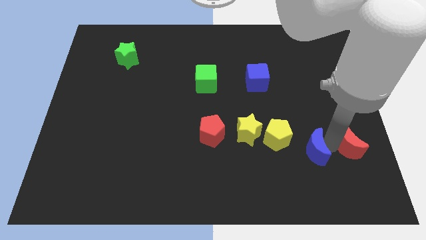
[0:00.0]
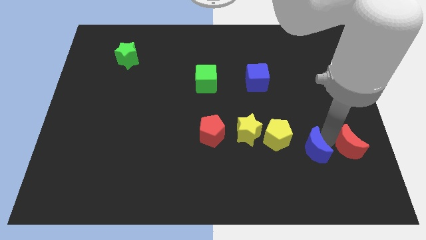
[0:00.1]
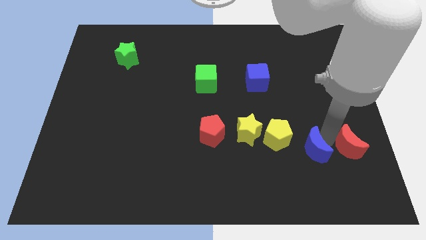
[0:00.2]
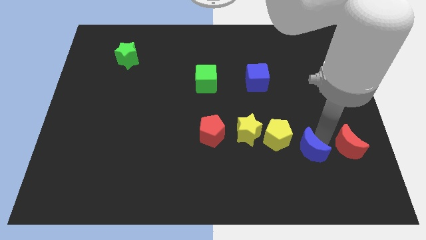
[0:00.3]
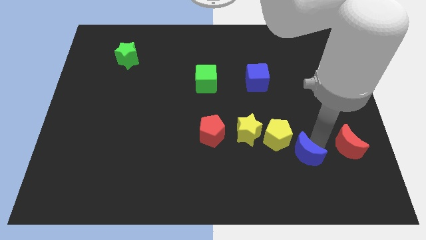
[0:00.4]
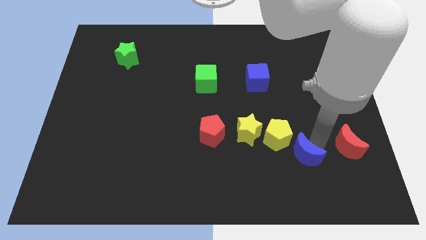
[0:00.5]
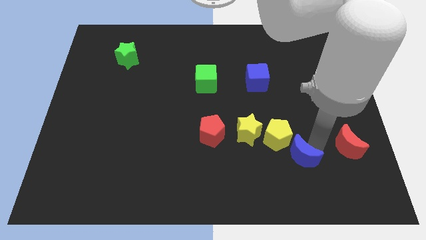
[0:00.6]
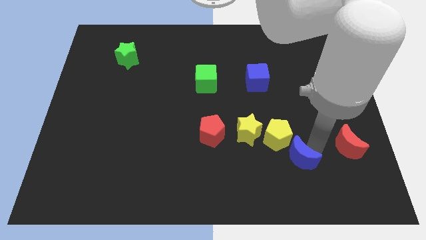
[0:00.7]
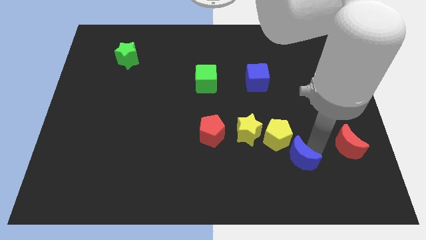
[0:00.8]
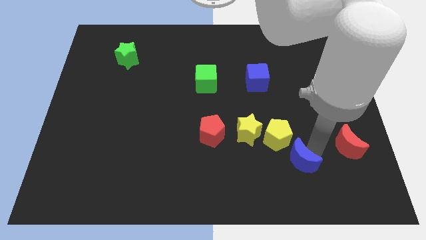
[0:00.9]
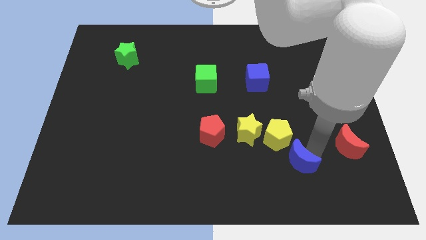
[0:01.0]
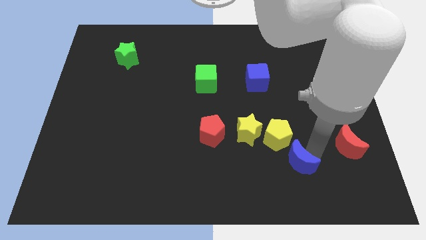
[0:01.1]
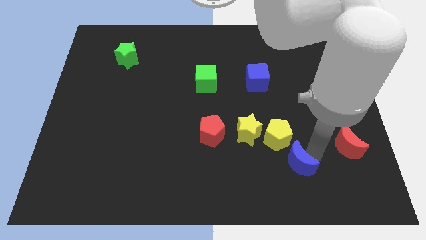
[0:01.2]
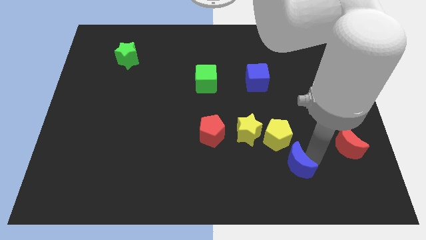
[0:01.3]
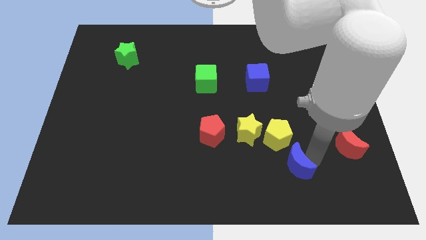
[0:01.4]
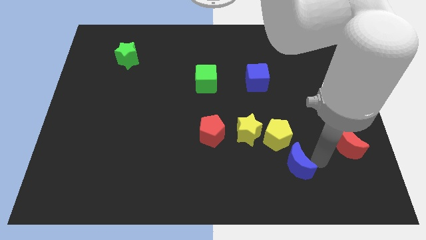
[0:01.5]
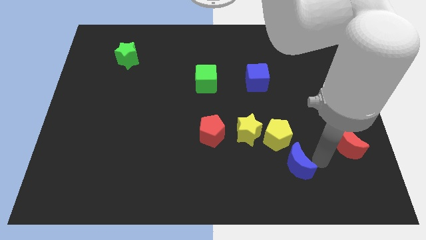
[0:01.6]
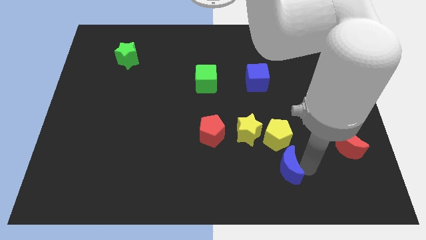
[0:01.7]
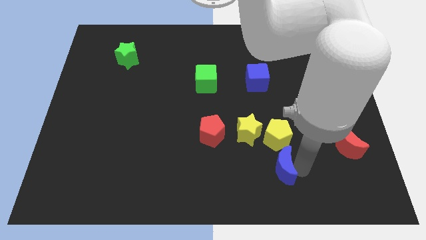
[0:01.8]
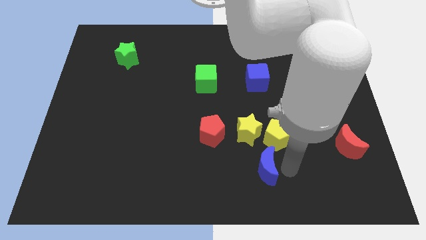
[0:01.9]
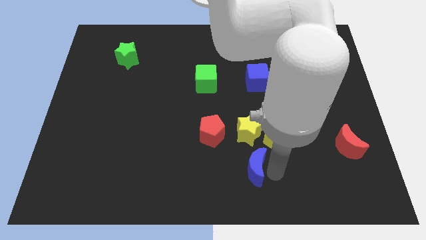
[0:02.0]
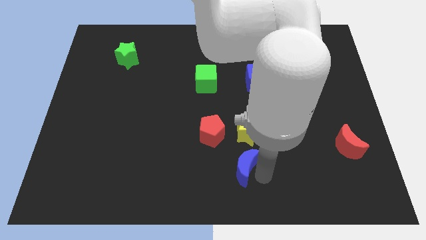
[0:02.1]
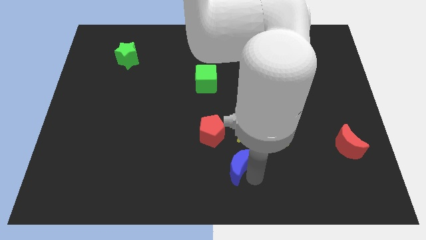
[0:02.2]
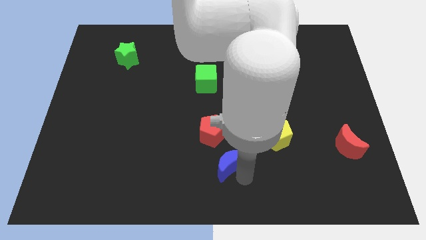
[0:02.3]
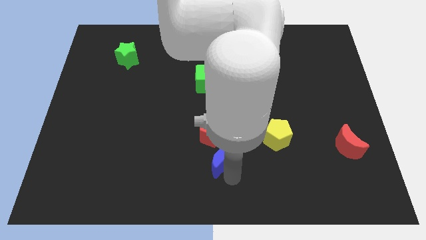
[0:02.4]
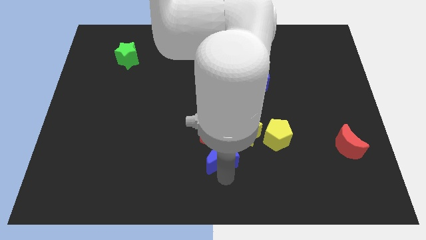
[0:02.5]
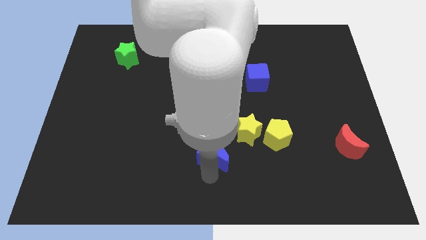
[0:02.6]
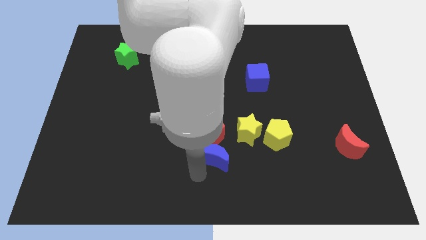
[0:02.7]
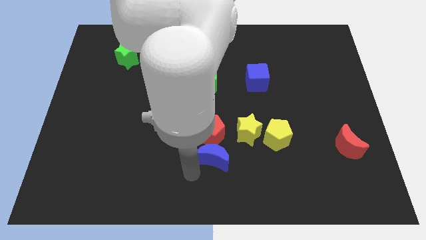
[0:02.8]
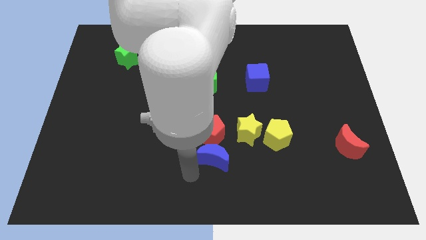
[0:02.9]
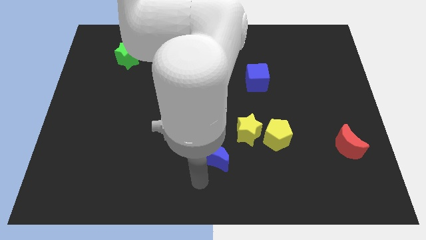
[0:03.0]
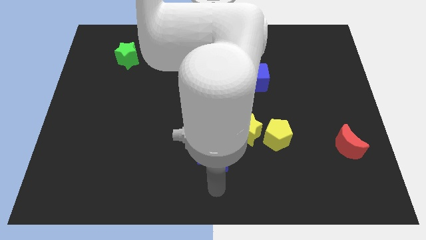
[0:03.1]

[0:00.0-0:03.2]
put the blue moon to the bottom side of the red pentagon

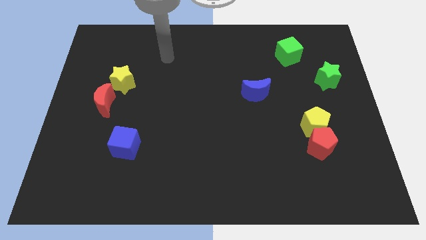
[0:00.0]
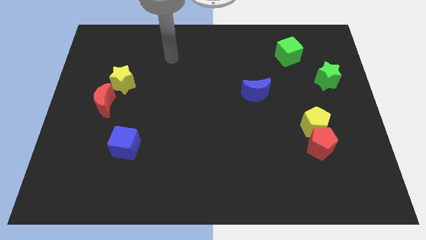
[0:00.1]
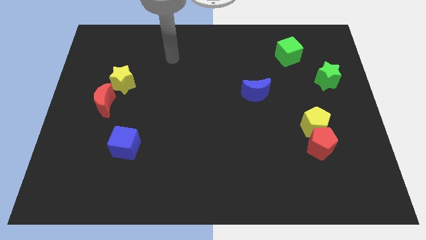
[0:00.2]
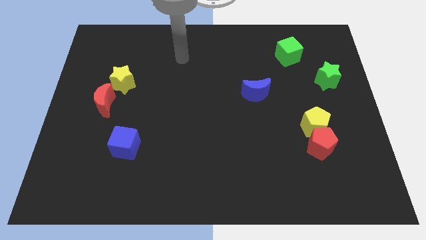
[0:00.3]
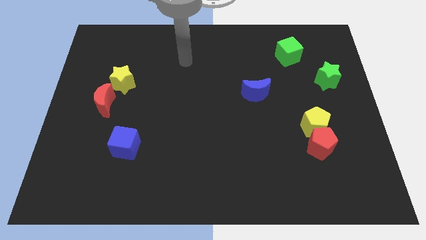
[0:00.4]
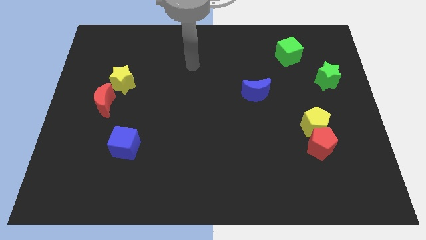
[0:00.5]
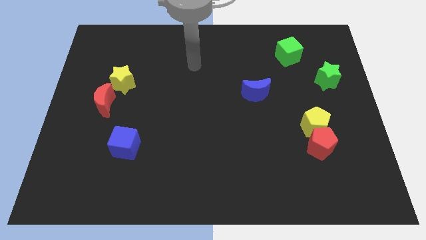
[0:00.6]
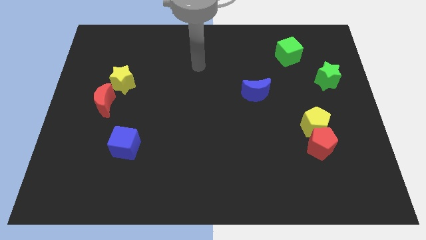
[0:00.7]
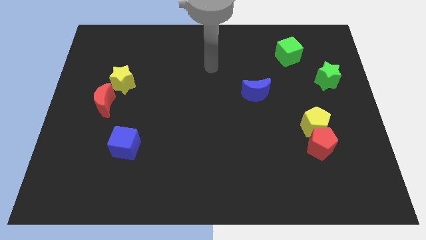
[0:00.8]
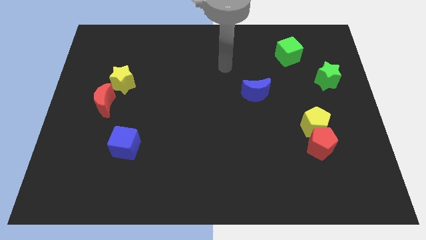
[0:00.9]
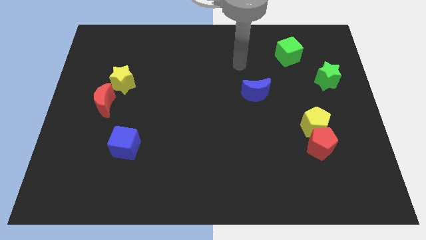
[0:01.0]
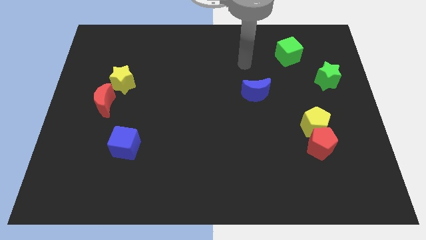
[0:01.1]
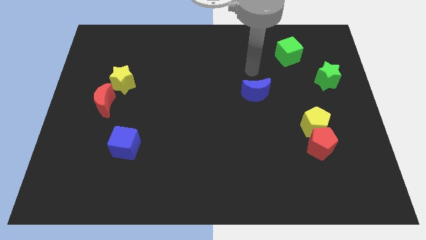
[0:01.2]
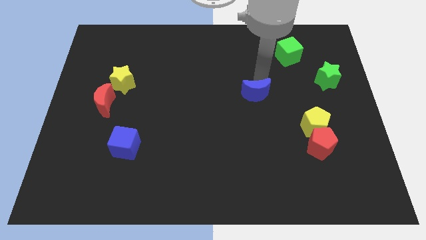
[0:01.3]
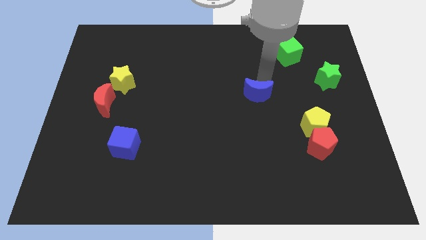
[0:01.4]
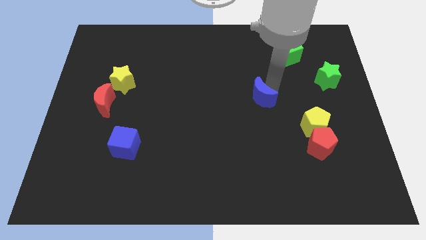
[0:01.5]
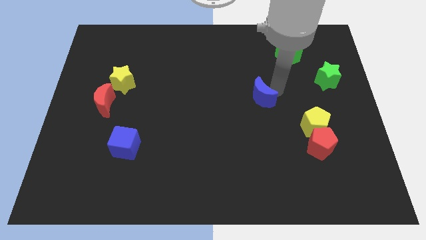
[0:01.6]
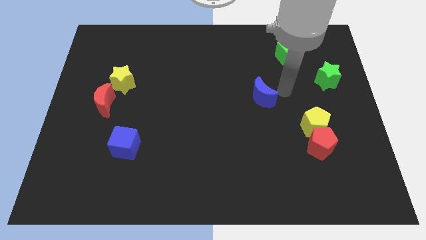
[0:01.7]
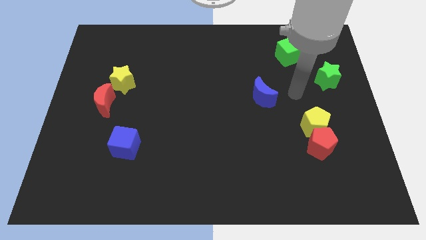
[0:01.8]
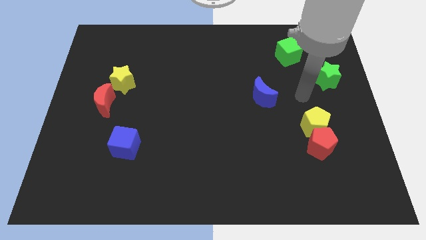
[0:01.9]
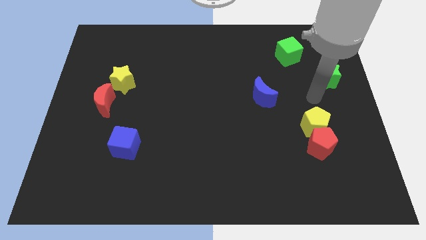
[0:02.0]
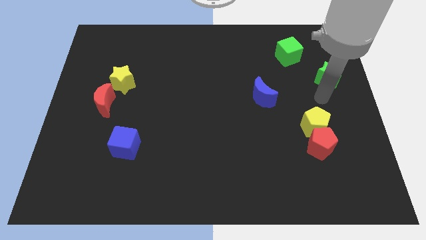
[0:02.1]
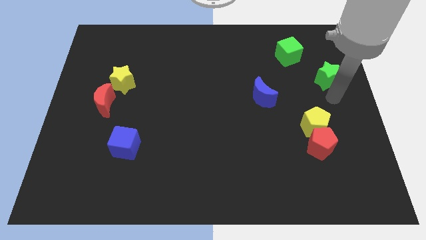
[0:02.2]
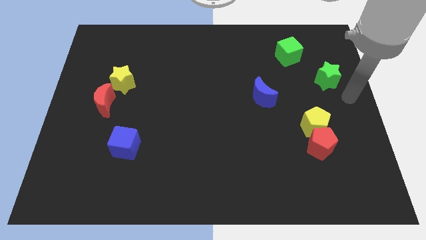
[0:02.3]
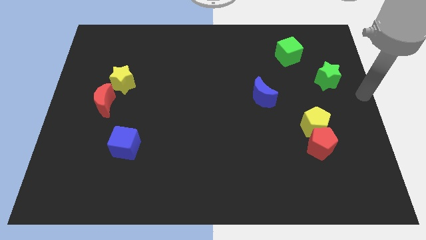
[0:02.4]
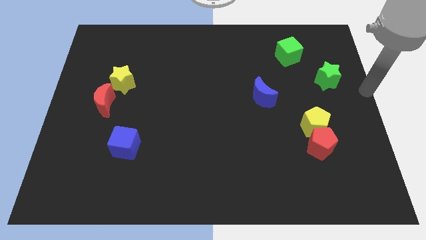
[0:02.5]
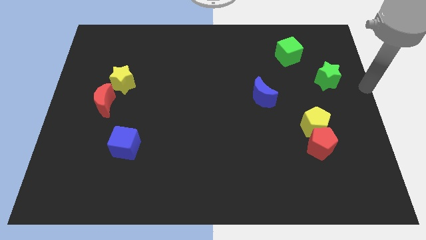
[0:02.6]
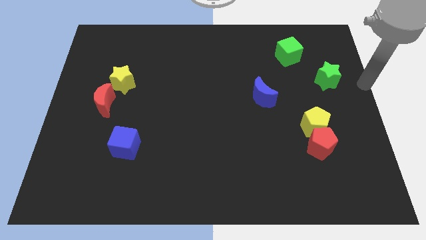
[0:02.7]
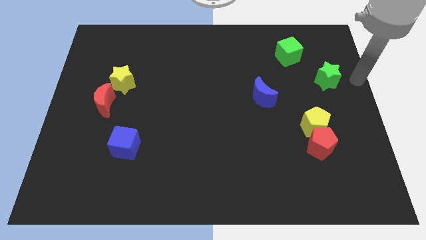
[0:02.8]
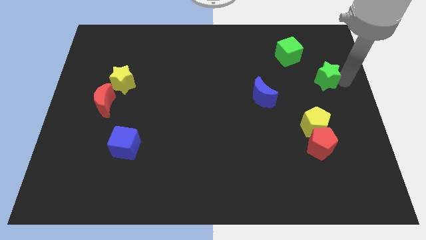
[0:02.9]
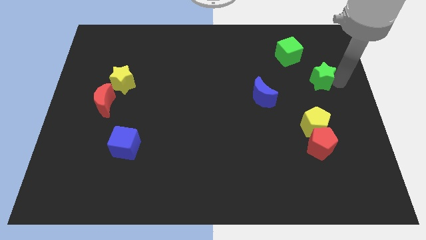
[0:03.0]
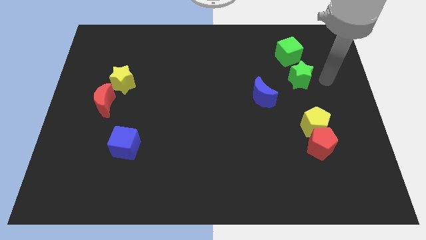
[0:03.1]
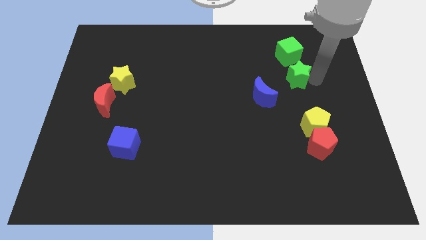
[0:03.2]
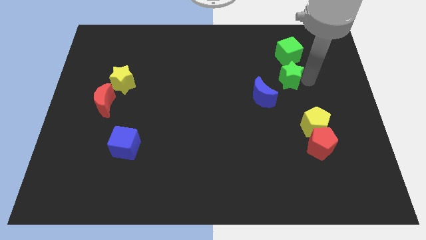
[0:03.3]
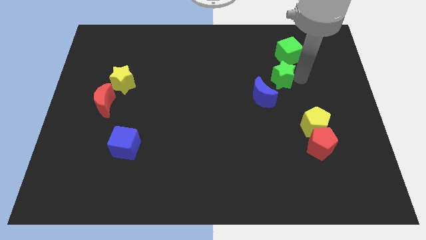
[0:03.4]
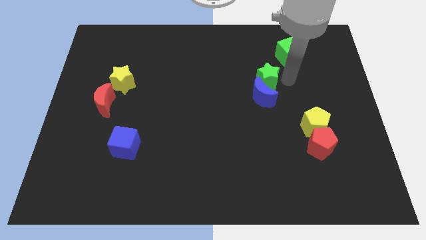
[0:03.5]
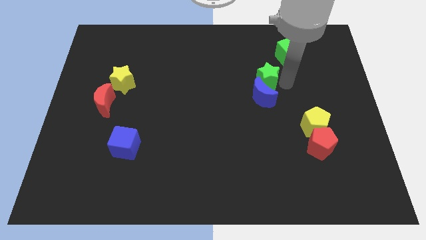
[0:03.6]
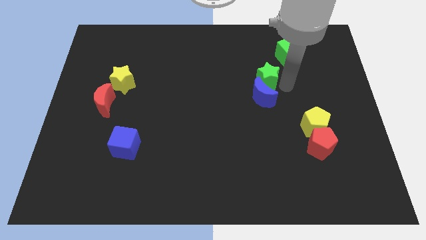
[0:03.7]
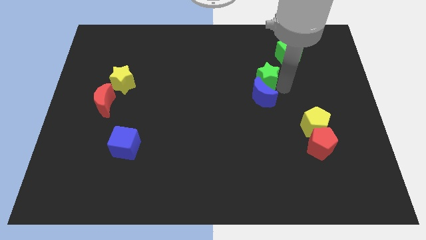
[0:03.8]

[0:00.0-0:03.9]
place the green star above the blue moon

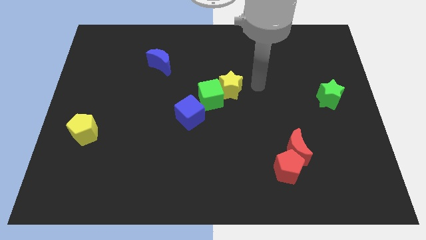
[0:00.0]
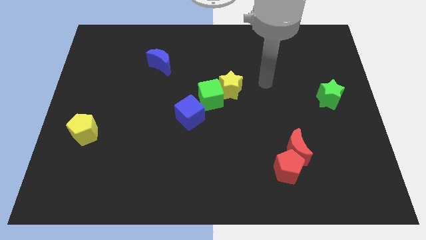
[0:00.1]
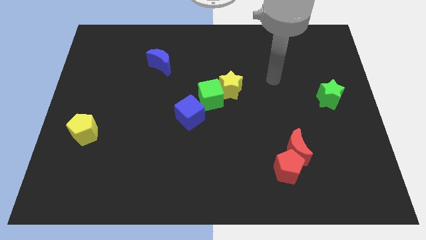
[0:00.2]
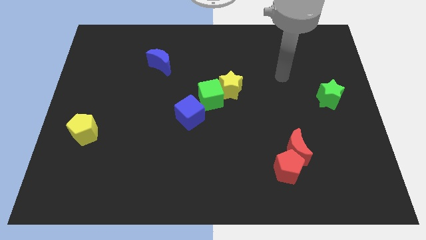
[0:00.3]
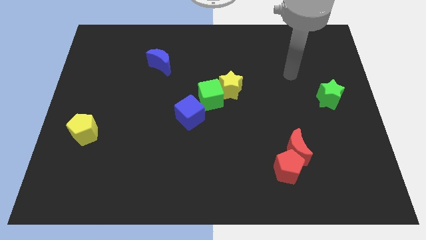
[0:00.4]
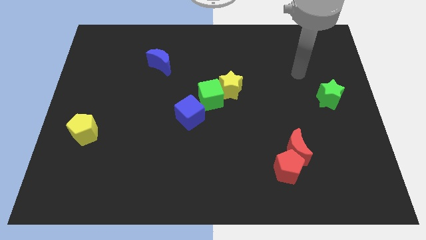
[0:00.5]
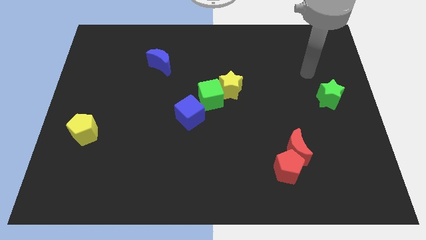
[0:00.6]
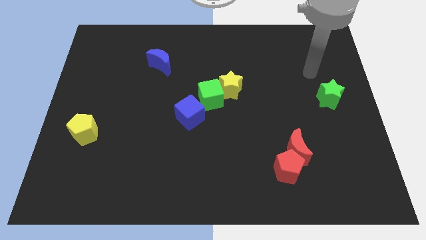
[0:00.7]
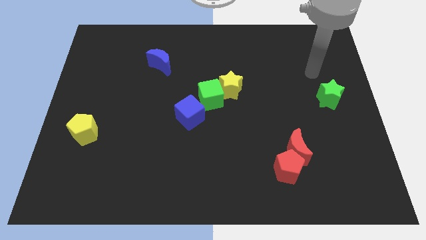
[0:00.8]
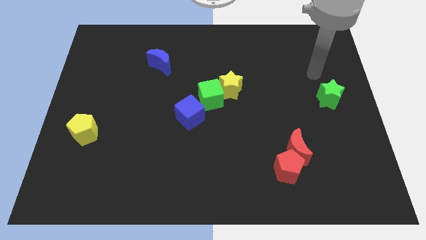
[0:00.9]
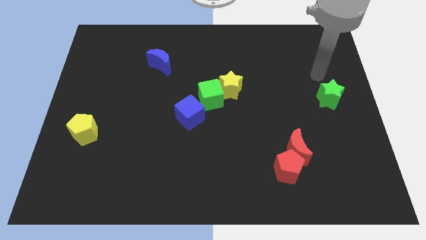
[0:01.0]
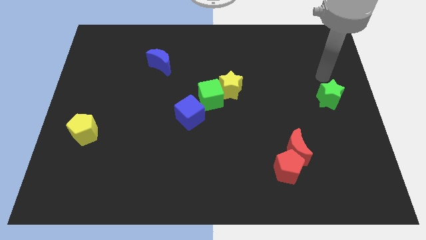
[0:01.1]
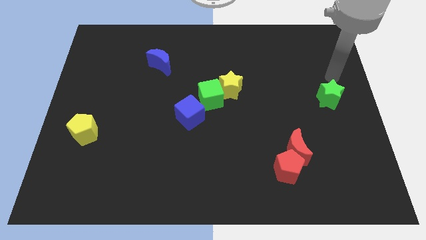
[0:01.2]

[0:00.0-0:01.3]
point your arm at the top of the green star

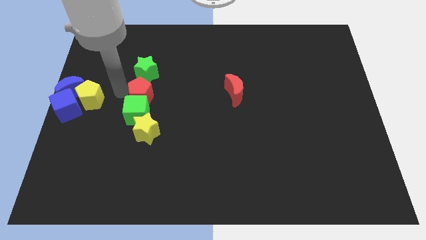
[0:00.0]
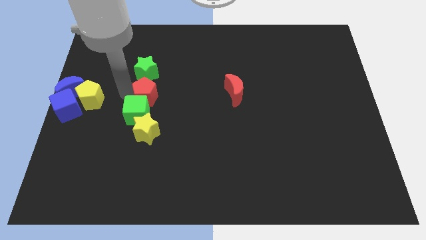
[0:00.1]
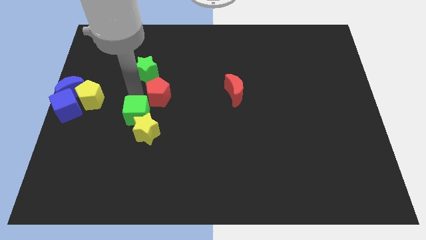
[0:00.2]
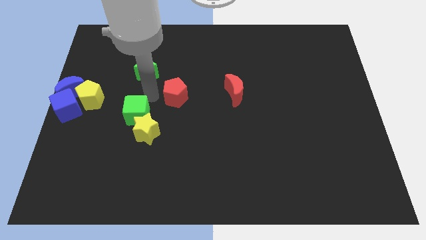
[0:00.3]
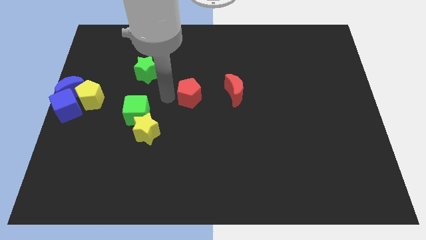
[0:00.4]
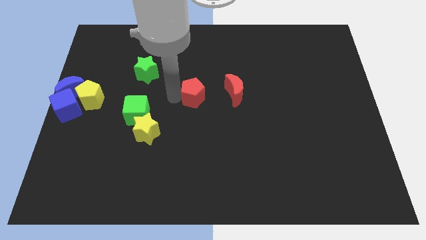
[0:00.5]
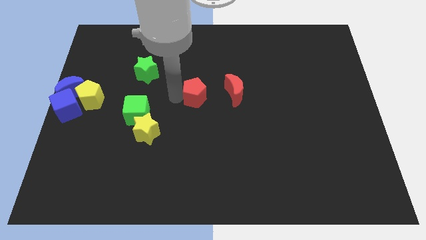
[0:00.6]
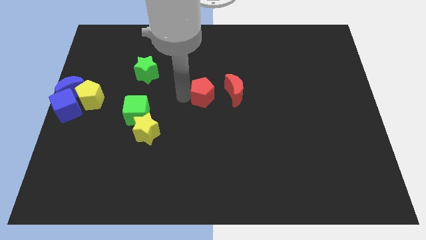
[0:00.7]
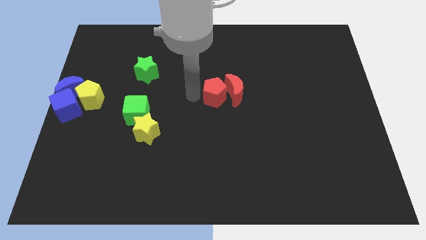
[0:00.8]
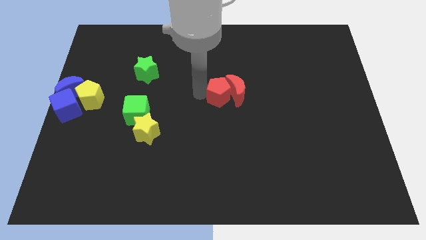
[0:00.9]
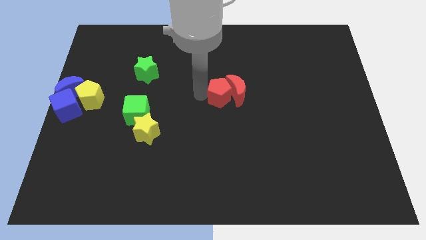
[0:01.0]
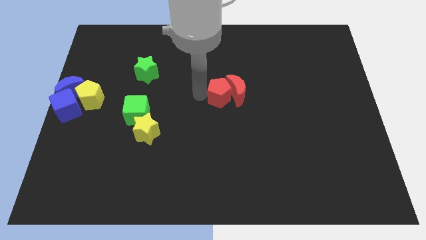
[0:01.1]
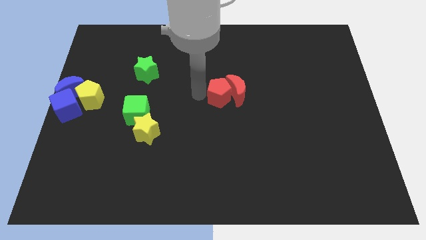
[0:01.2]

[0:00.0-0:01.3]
push the red pentagon into the red crescent
